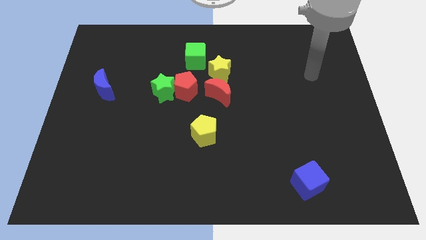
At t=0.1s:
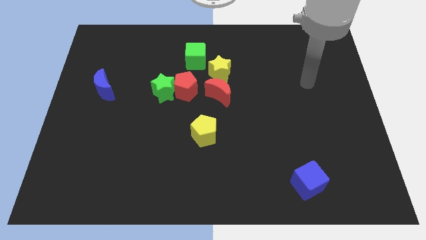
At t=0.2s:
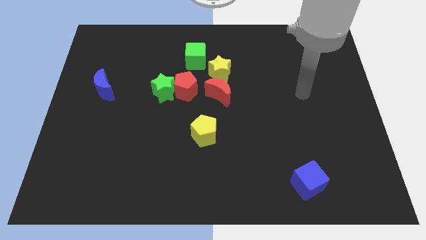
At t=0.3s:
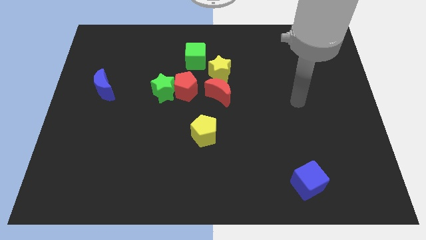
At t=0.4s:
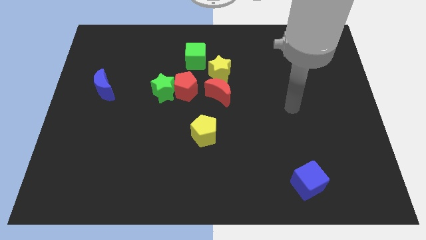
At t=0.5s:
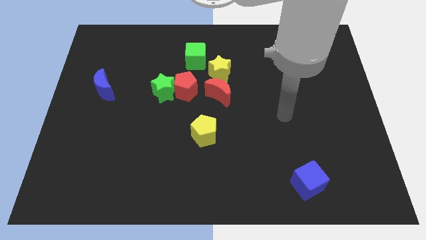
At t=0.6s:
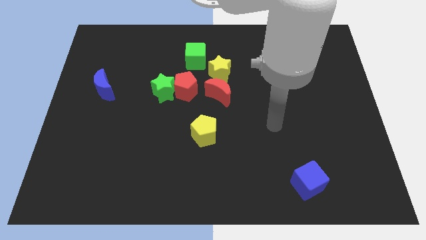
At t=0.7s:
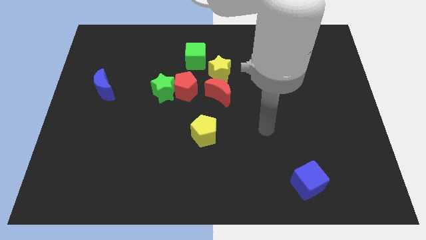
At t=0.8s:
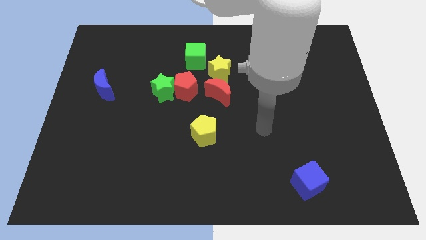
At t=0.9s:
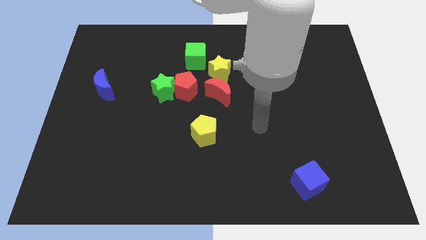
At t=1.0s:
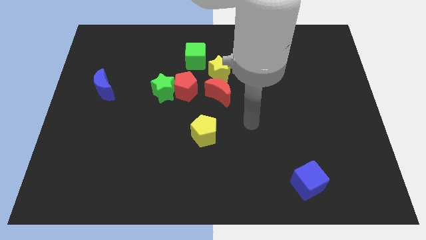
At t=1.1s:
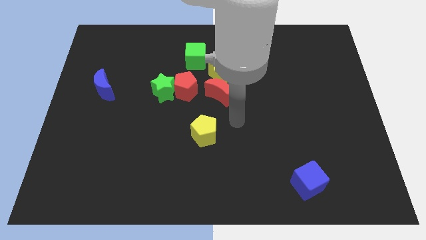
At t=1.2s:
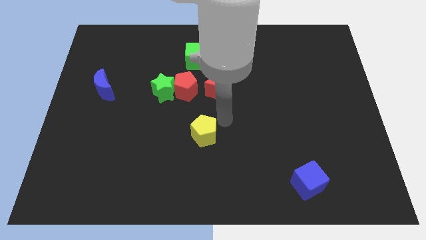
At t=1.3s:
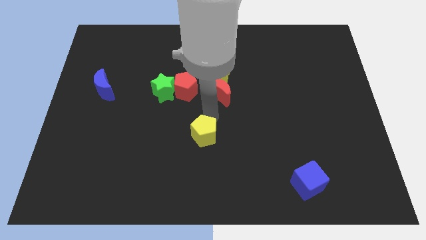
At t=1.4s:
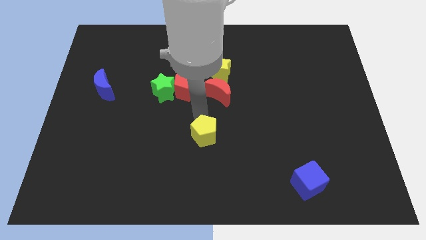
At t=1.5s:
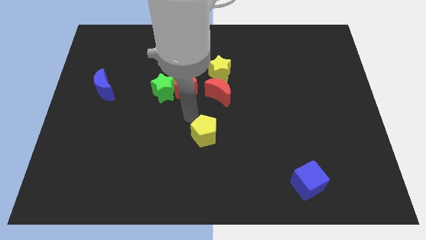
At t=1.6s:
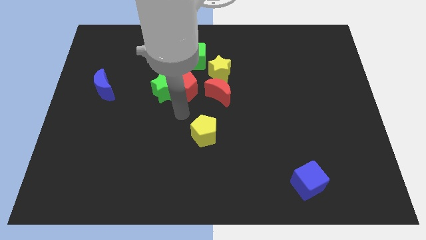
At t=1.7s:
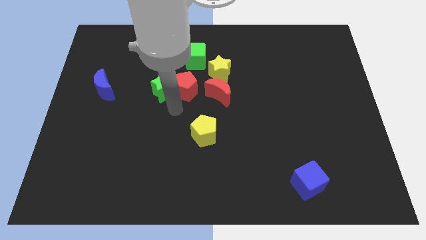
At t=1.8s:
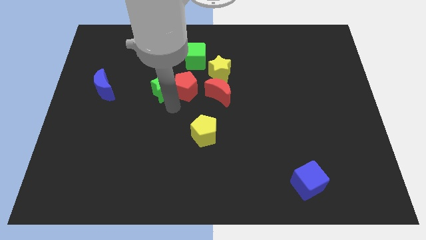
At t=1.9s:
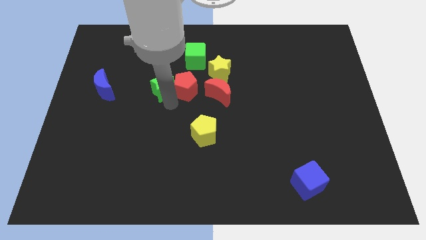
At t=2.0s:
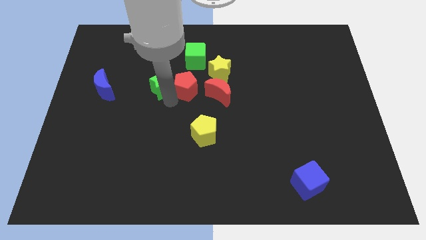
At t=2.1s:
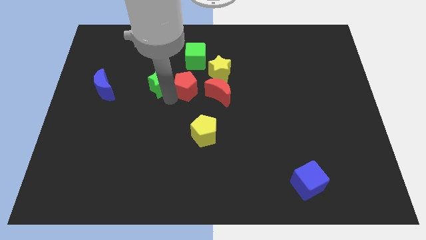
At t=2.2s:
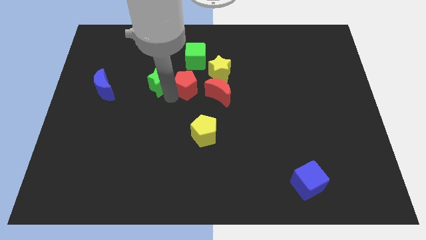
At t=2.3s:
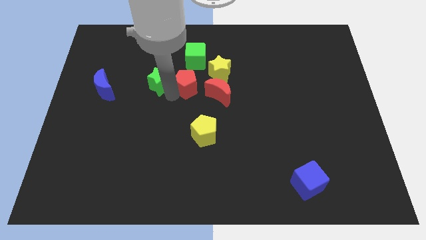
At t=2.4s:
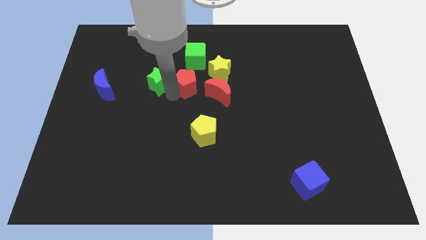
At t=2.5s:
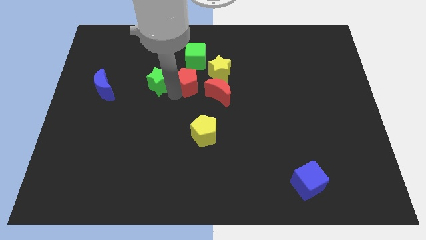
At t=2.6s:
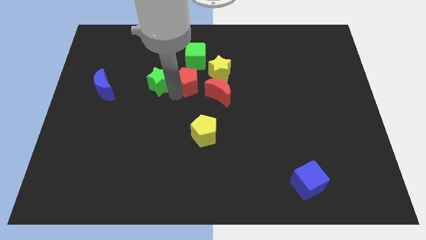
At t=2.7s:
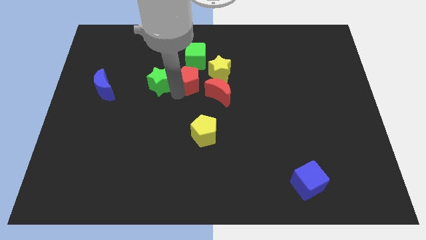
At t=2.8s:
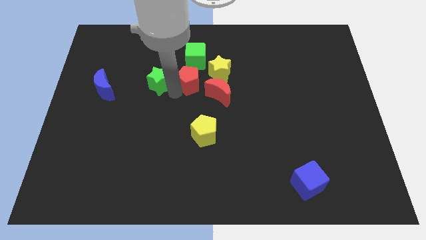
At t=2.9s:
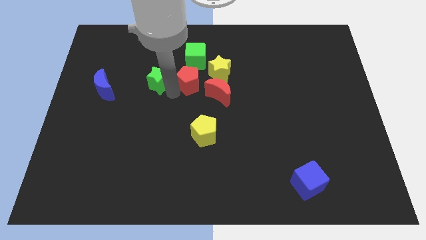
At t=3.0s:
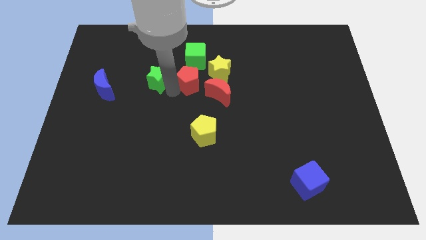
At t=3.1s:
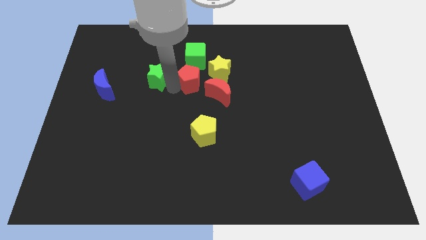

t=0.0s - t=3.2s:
push the green star and the red pentagon up slightly

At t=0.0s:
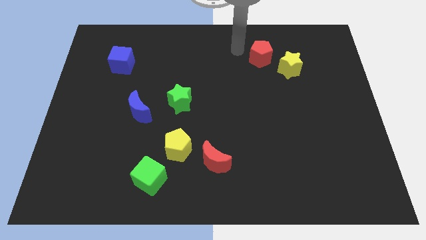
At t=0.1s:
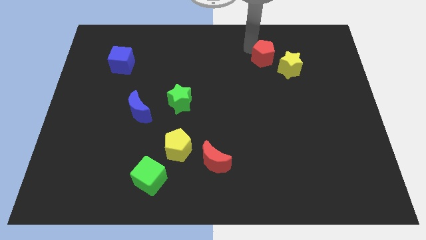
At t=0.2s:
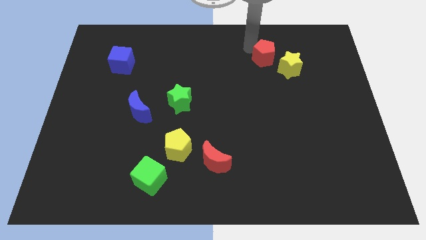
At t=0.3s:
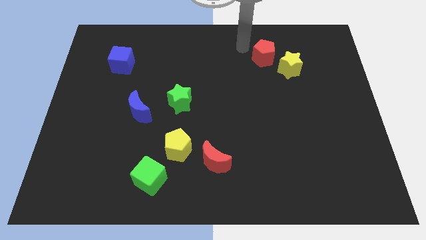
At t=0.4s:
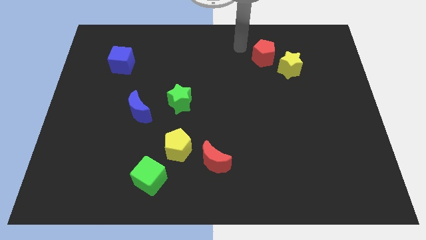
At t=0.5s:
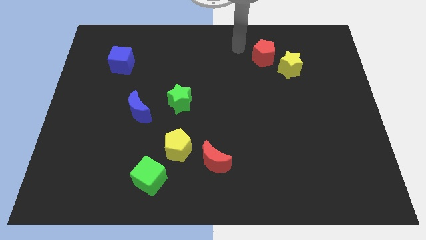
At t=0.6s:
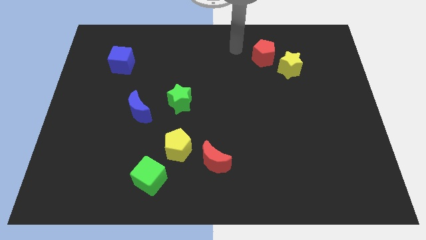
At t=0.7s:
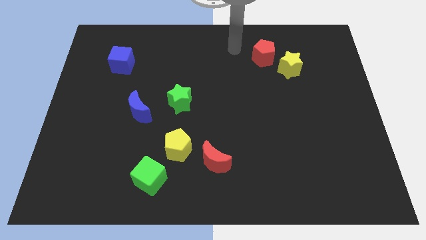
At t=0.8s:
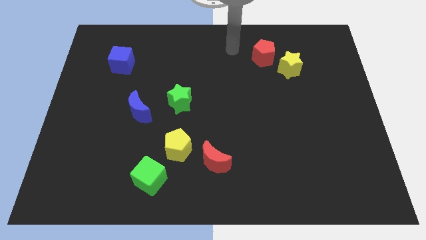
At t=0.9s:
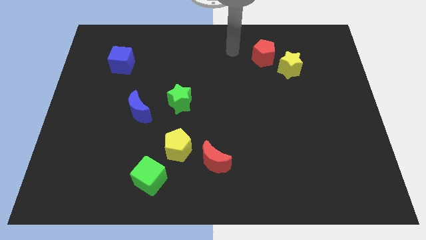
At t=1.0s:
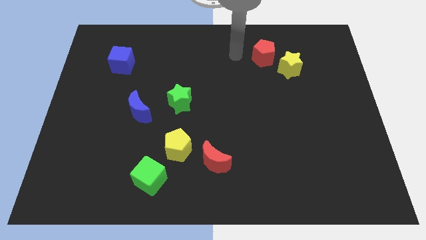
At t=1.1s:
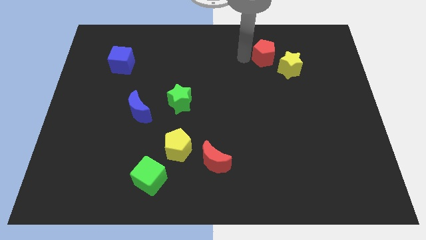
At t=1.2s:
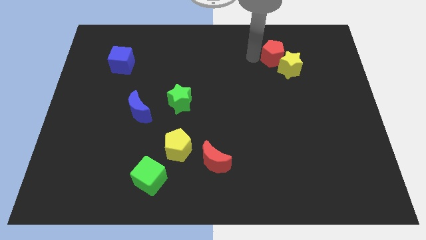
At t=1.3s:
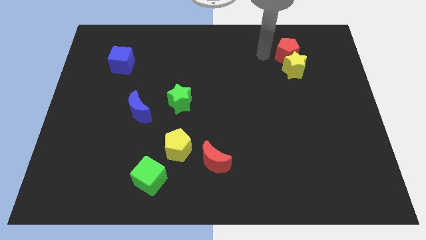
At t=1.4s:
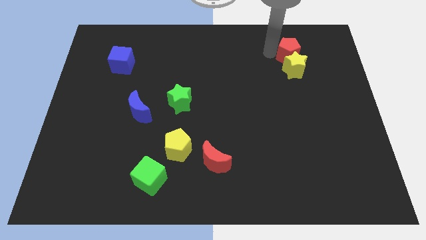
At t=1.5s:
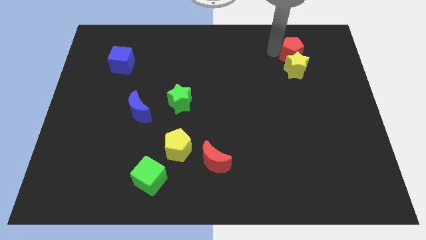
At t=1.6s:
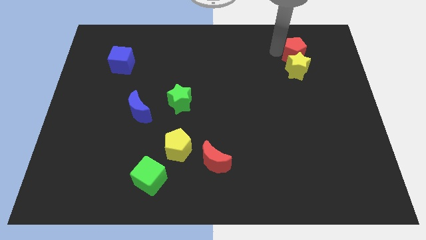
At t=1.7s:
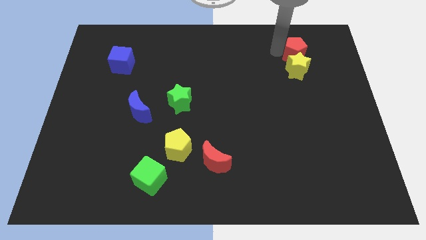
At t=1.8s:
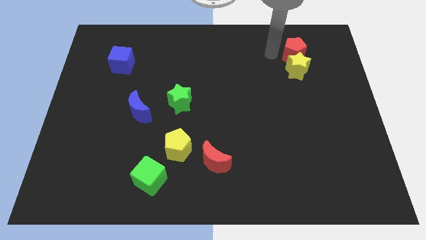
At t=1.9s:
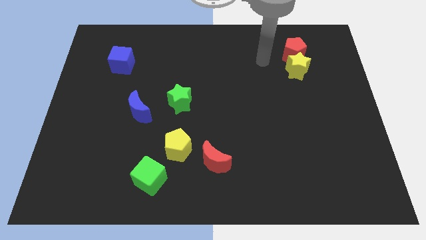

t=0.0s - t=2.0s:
push the red pentagon to the top of the yellow star

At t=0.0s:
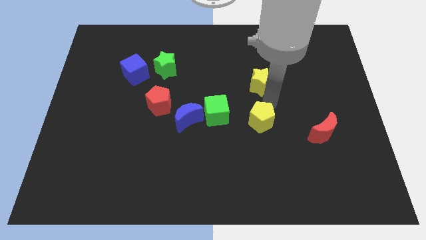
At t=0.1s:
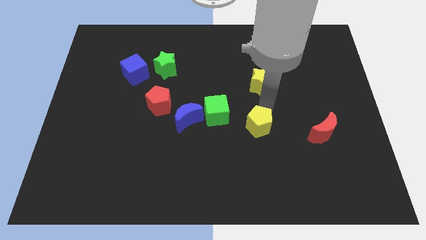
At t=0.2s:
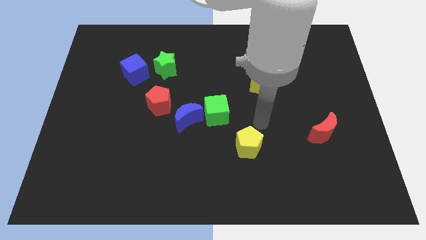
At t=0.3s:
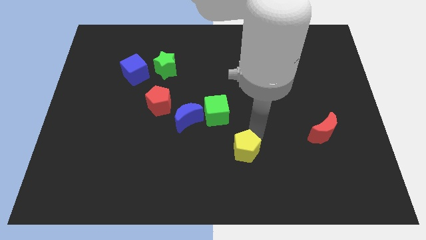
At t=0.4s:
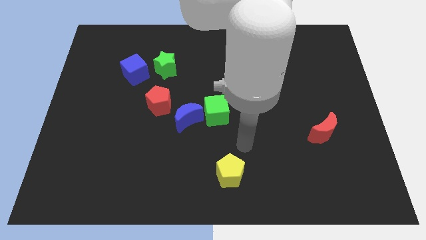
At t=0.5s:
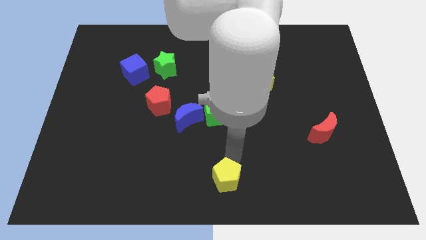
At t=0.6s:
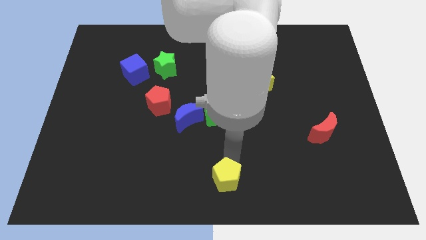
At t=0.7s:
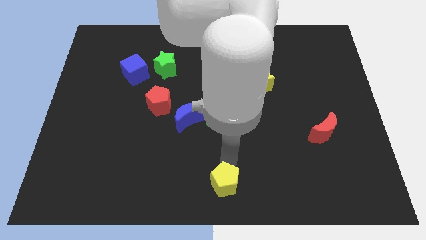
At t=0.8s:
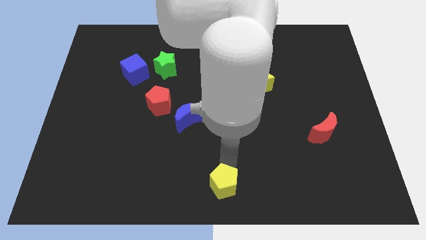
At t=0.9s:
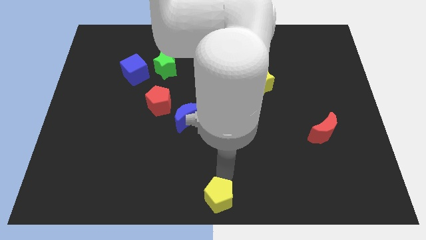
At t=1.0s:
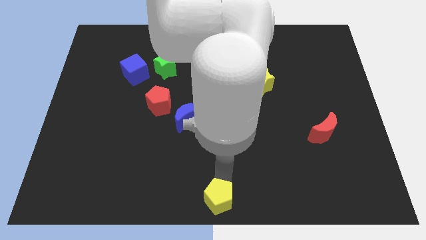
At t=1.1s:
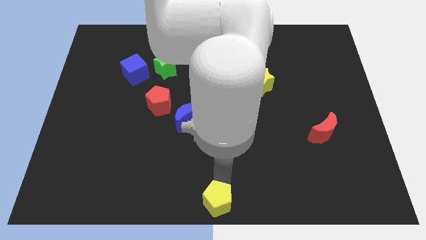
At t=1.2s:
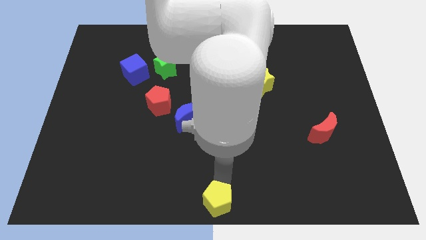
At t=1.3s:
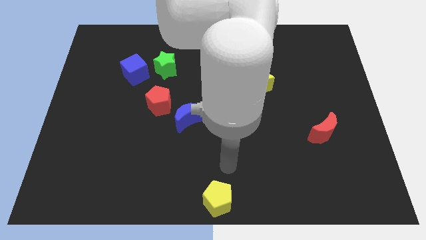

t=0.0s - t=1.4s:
move the yellow pentagon to the bottom center of the board

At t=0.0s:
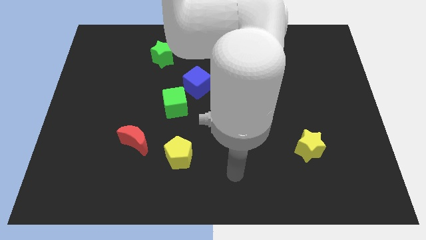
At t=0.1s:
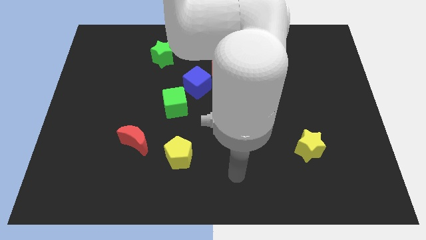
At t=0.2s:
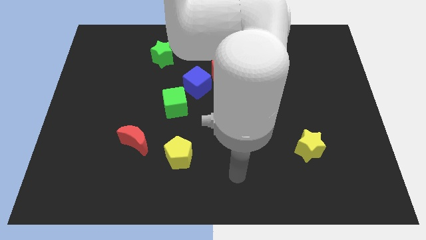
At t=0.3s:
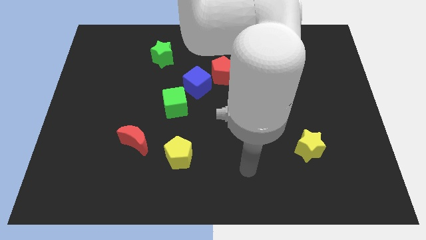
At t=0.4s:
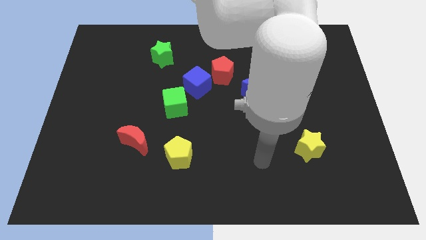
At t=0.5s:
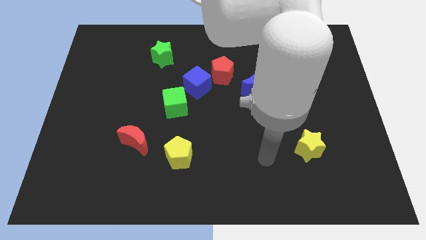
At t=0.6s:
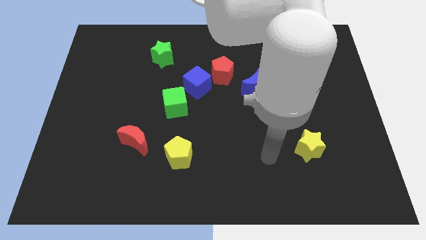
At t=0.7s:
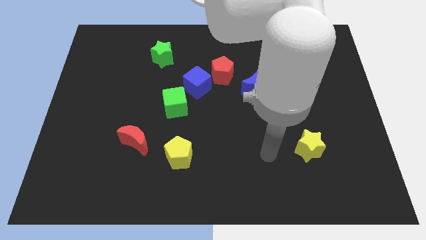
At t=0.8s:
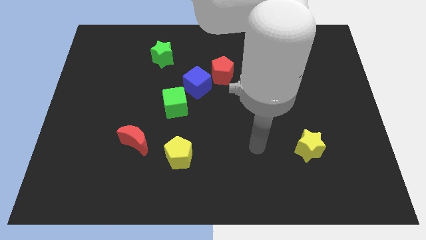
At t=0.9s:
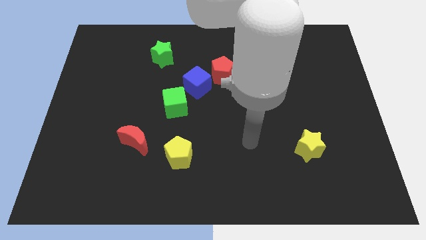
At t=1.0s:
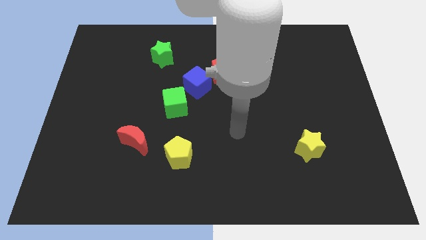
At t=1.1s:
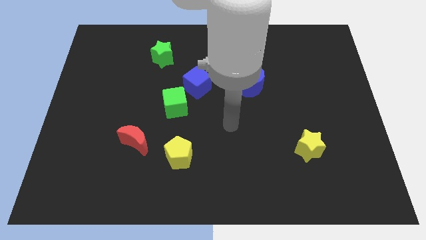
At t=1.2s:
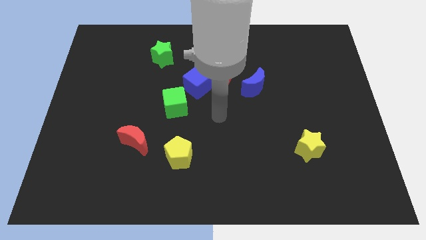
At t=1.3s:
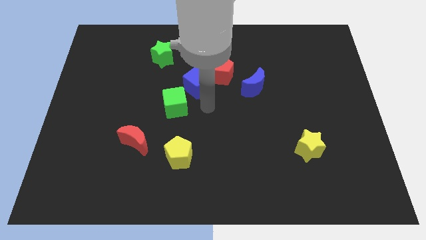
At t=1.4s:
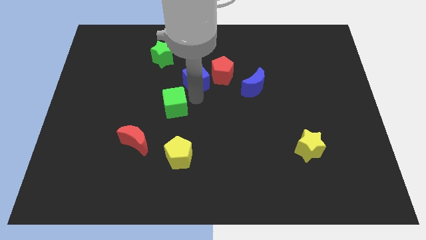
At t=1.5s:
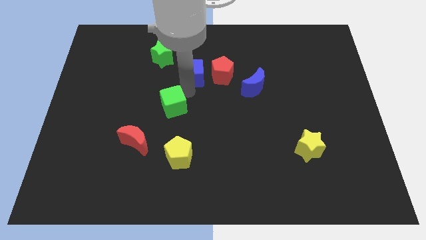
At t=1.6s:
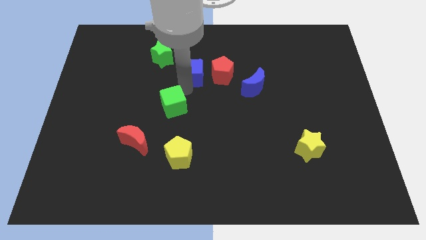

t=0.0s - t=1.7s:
move the blue cube to the left side of the red pentagon

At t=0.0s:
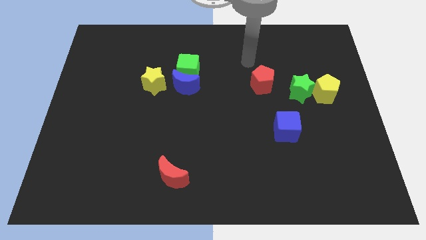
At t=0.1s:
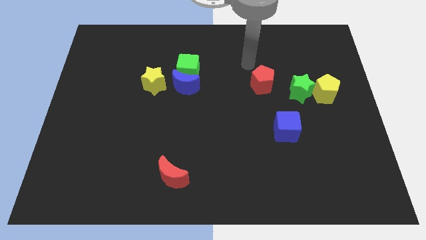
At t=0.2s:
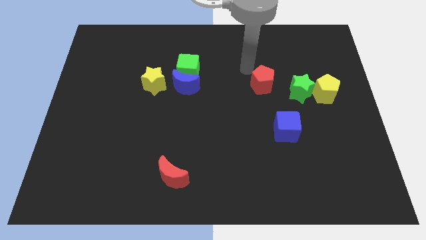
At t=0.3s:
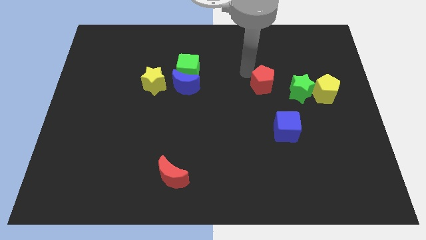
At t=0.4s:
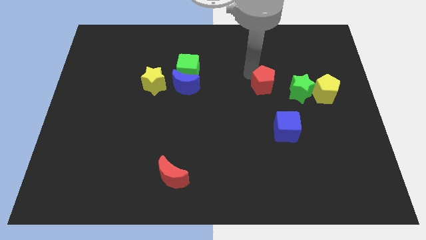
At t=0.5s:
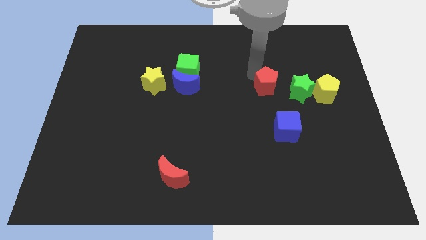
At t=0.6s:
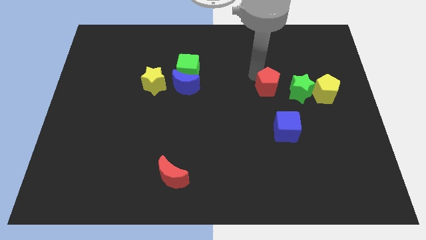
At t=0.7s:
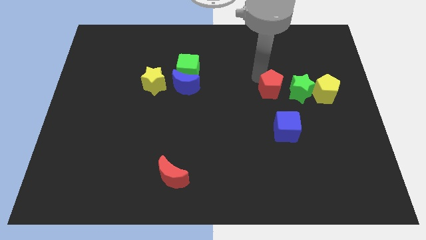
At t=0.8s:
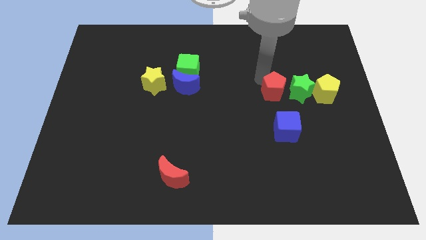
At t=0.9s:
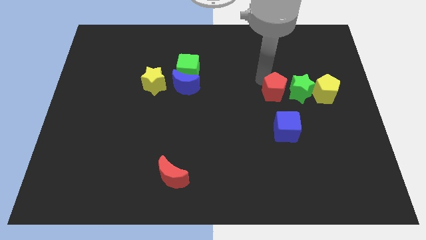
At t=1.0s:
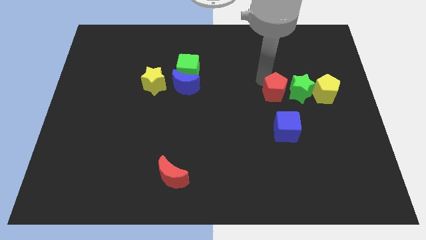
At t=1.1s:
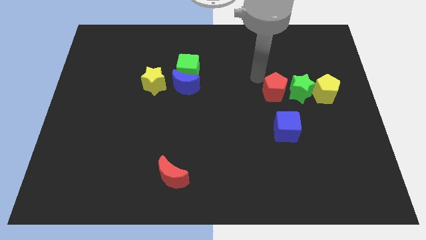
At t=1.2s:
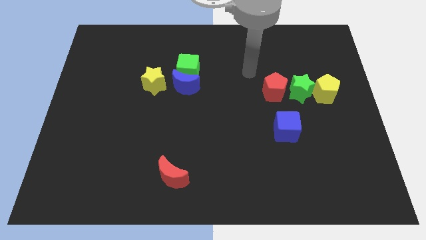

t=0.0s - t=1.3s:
move red pentagon towards green star
